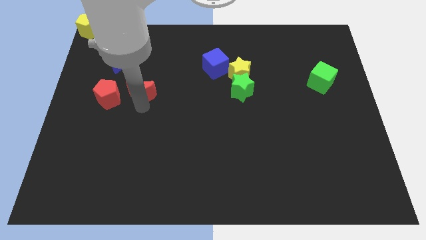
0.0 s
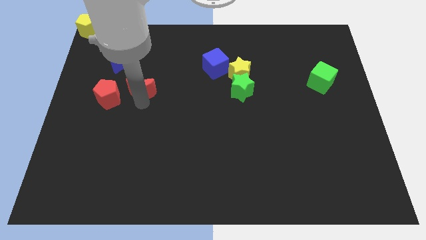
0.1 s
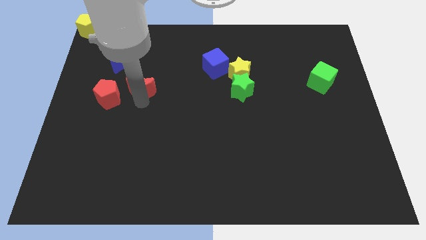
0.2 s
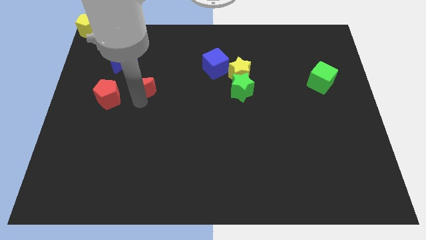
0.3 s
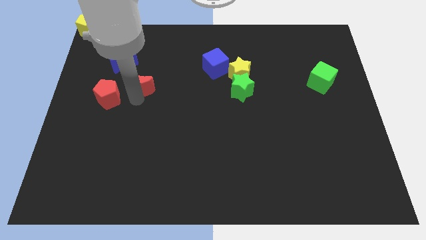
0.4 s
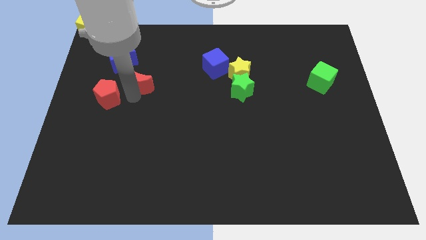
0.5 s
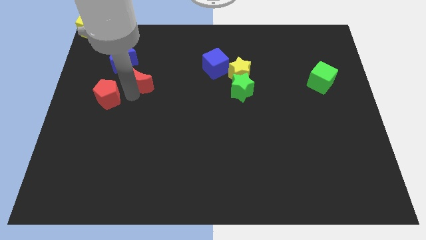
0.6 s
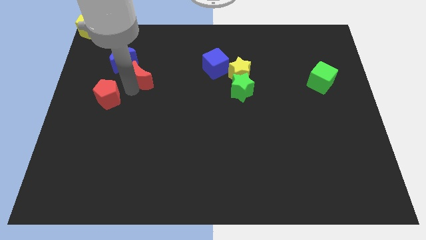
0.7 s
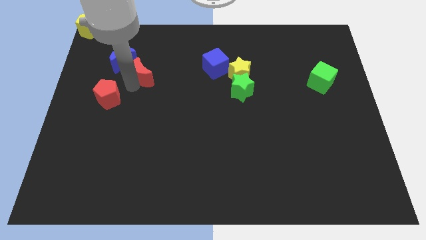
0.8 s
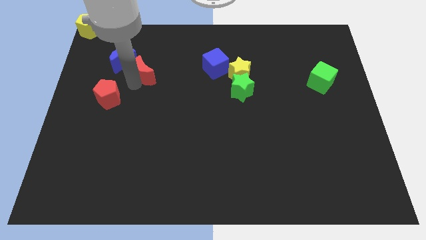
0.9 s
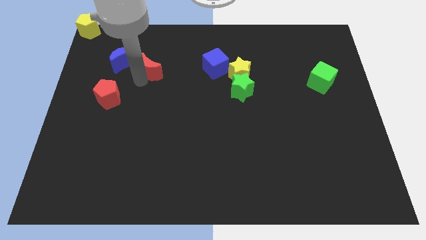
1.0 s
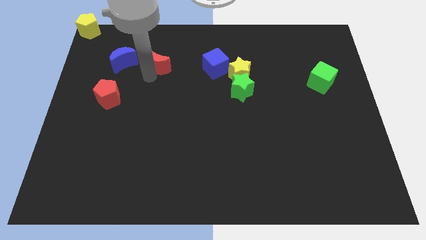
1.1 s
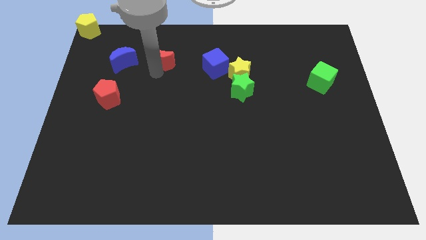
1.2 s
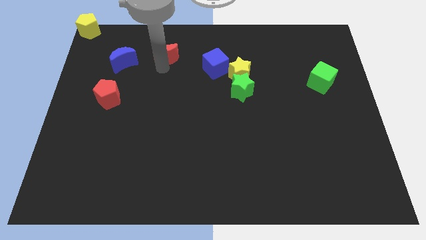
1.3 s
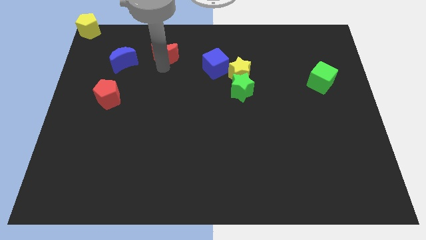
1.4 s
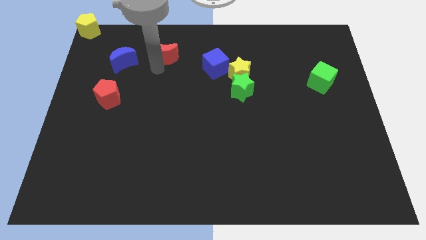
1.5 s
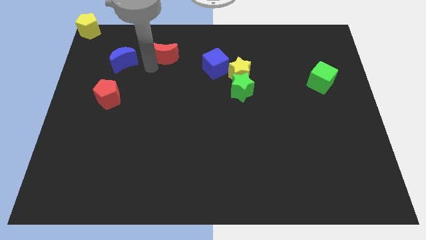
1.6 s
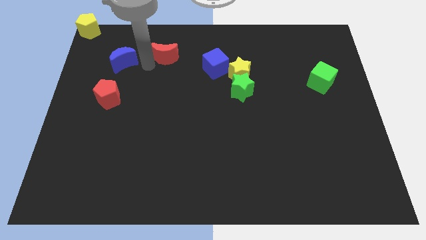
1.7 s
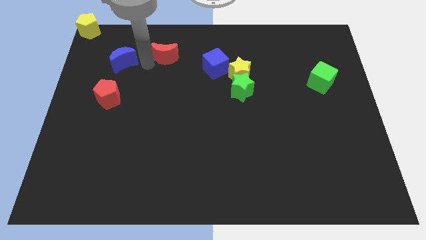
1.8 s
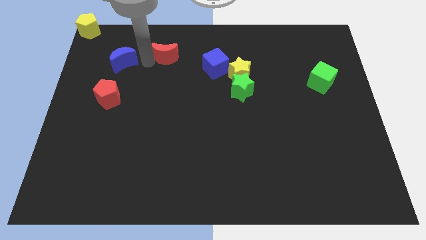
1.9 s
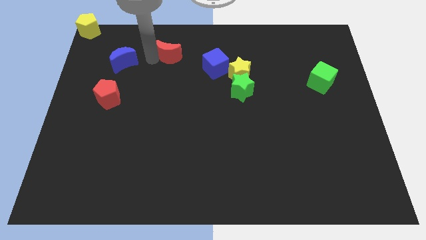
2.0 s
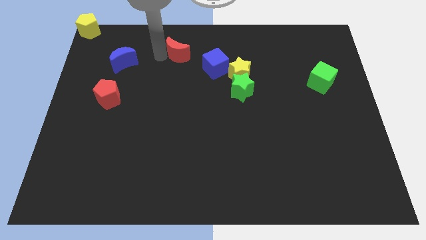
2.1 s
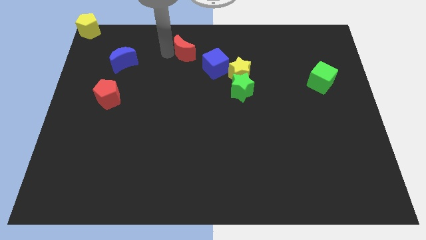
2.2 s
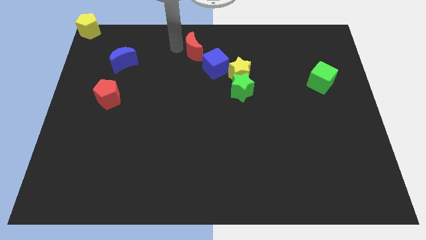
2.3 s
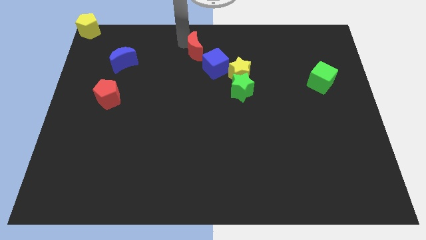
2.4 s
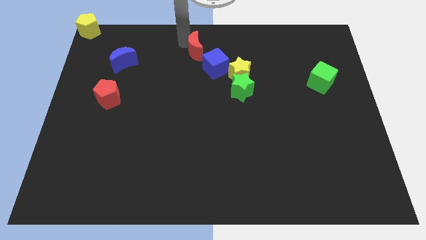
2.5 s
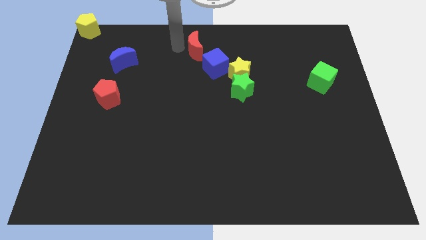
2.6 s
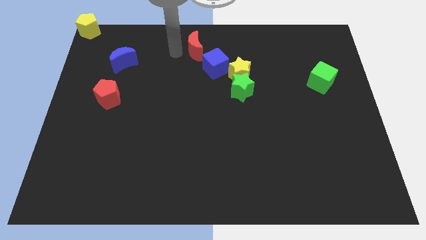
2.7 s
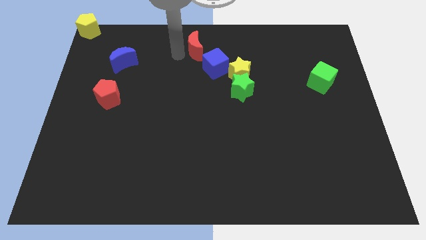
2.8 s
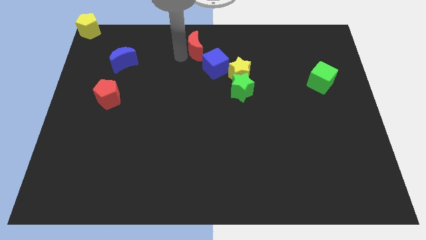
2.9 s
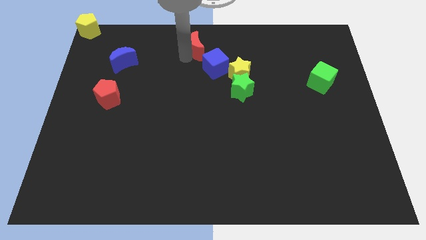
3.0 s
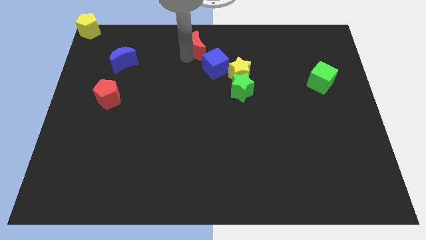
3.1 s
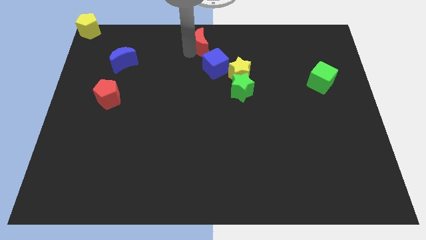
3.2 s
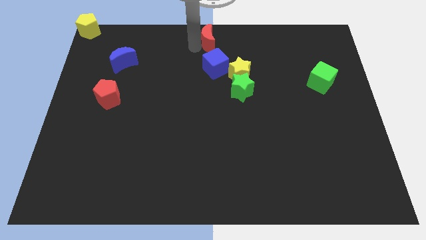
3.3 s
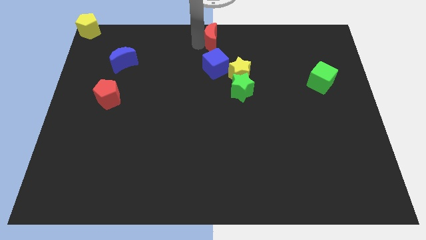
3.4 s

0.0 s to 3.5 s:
push red crescent above blue cube

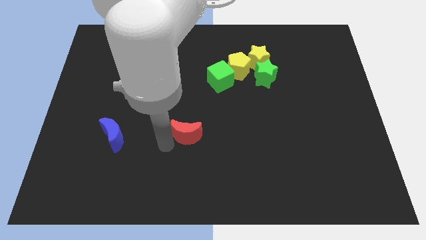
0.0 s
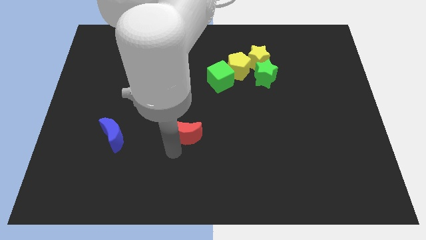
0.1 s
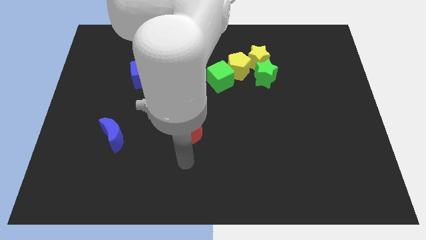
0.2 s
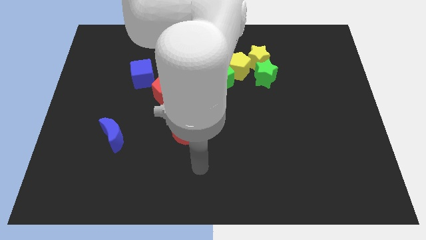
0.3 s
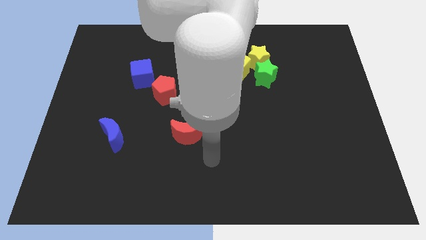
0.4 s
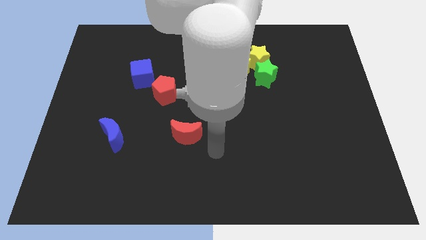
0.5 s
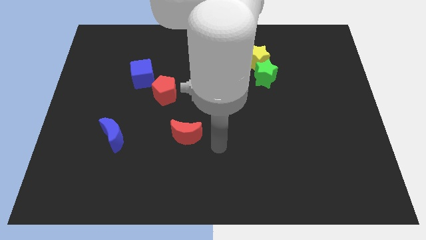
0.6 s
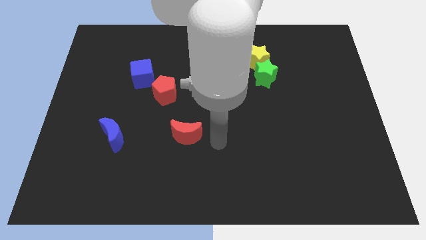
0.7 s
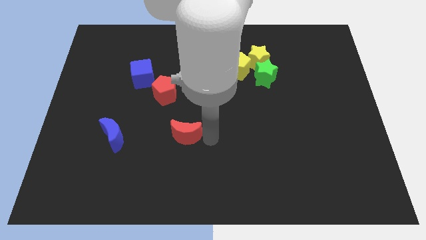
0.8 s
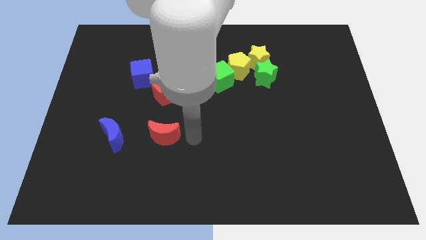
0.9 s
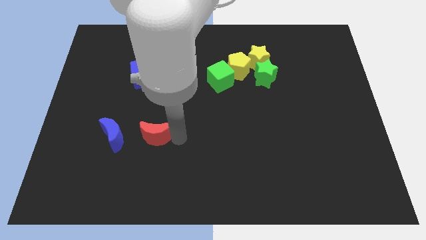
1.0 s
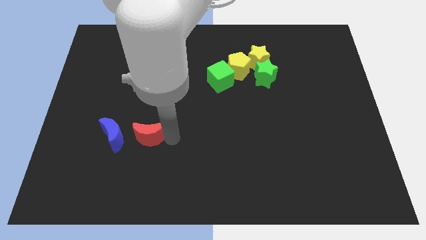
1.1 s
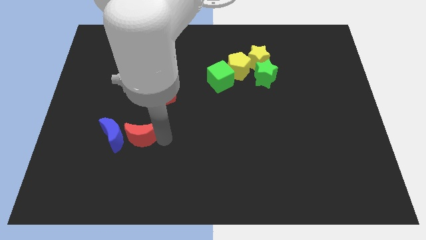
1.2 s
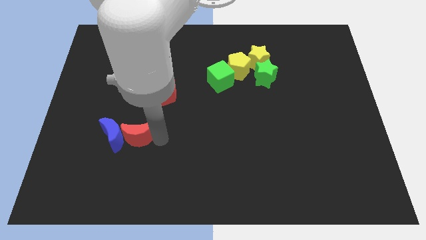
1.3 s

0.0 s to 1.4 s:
move the red crescent into the right side of the blue crescent

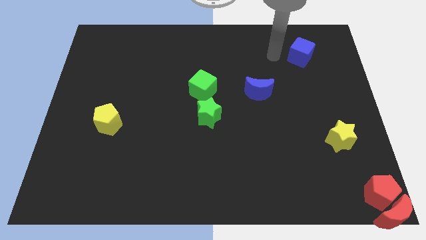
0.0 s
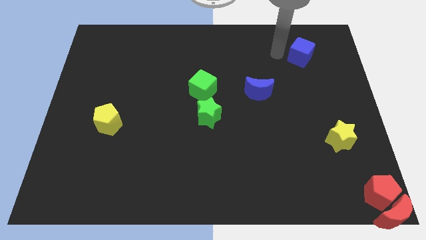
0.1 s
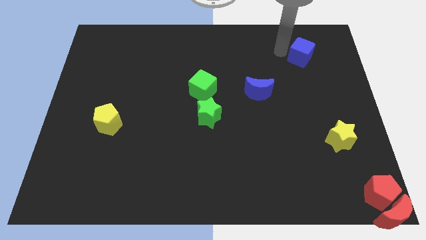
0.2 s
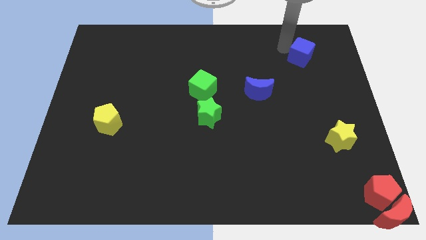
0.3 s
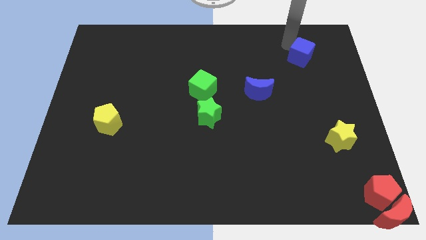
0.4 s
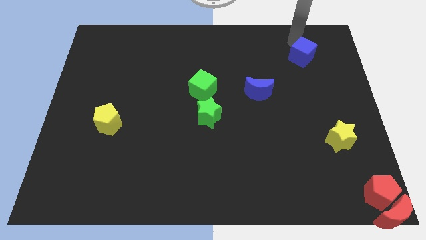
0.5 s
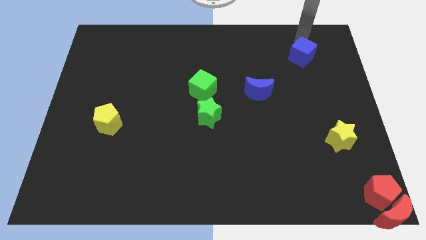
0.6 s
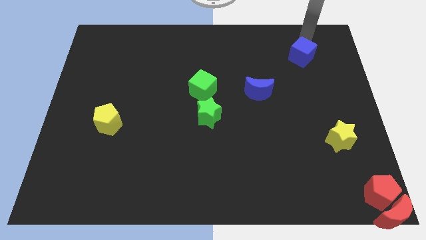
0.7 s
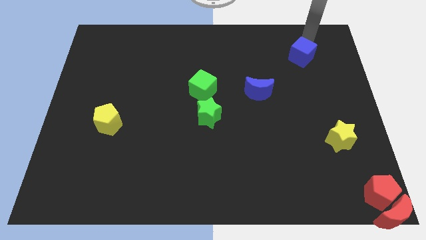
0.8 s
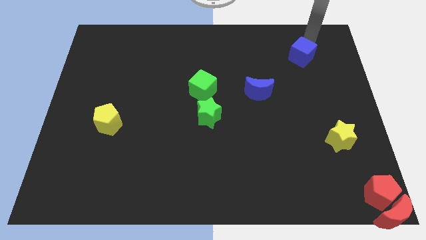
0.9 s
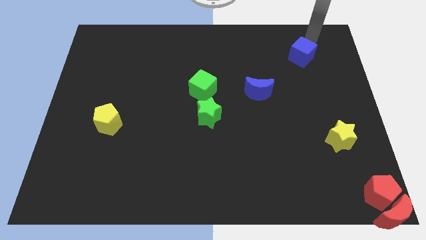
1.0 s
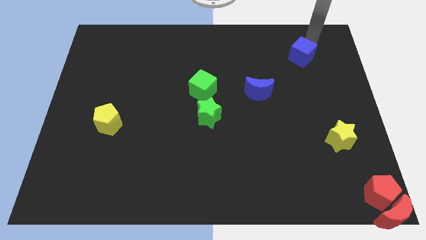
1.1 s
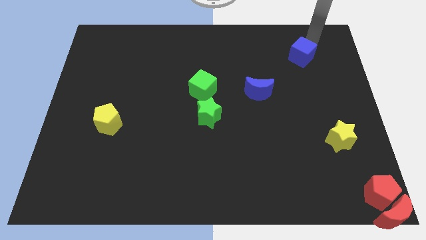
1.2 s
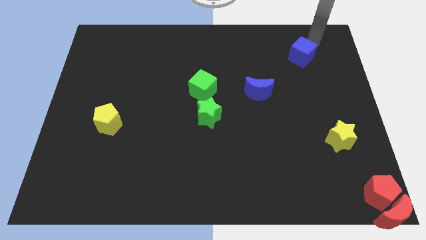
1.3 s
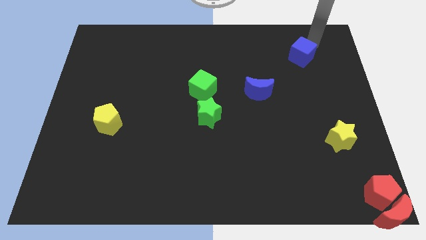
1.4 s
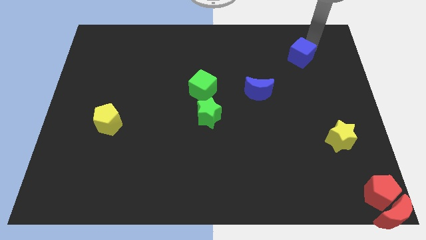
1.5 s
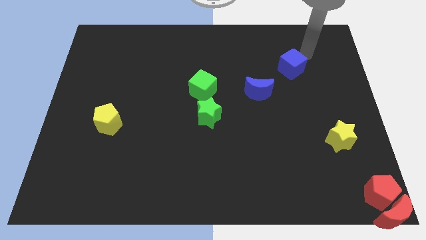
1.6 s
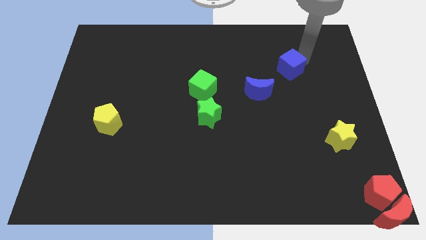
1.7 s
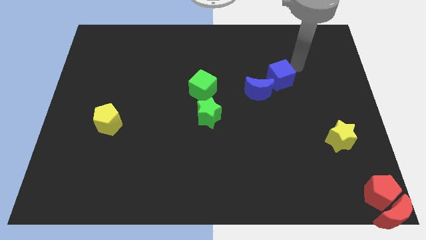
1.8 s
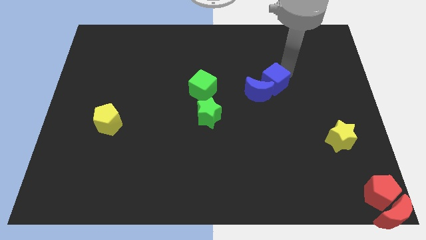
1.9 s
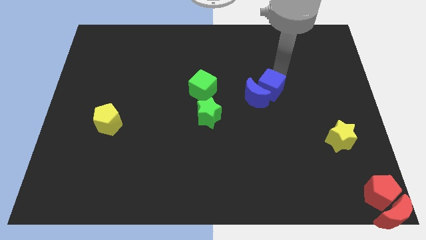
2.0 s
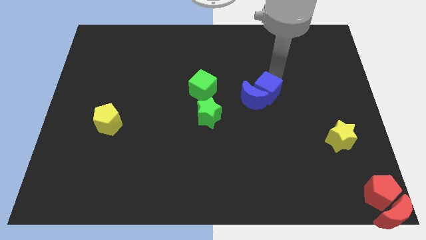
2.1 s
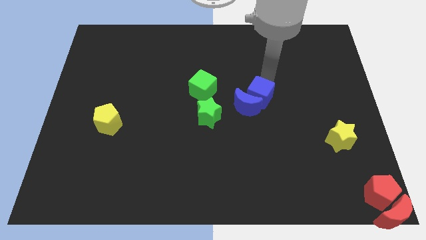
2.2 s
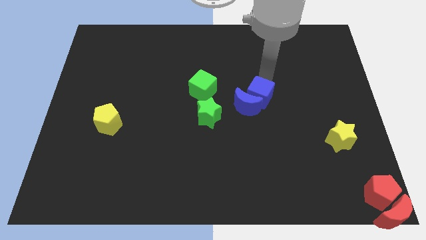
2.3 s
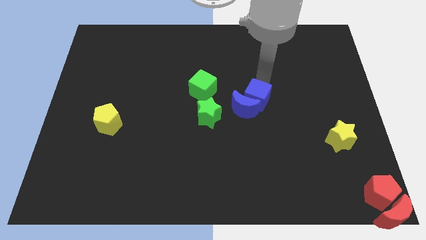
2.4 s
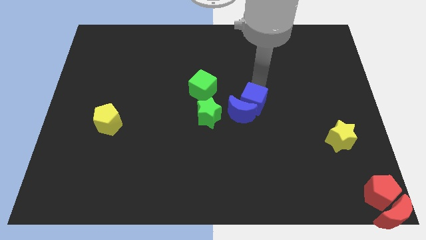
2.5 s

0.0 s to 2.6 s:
push the blue cube into the blue moon

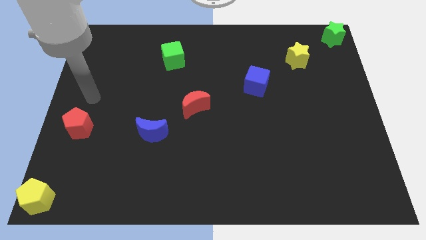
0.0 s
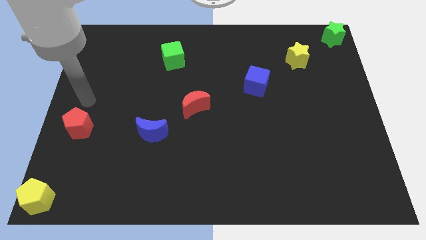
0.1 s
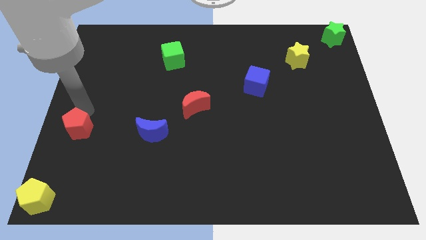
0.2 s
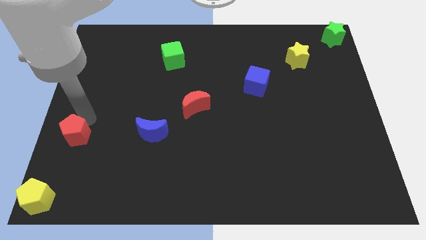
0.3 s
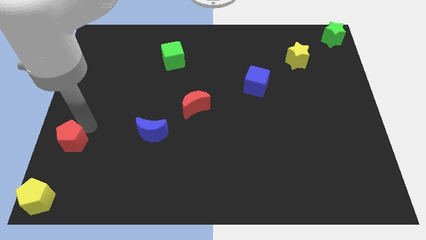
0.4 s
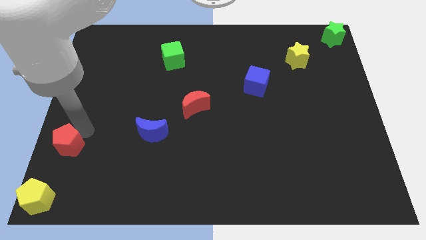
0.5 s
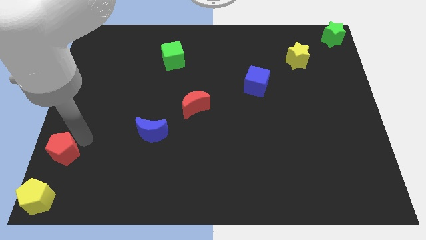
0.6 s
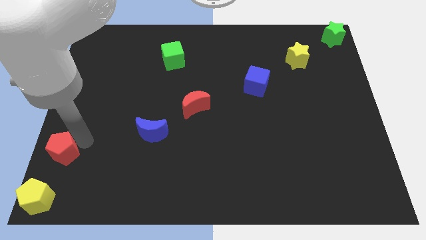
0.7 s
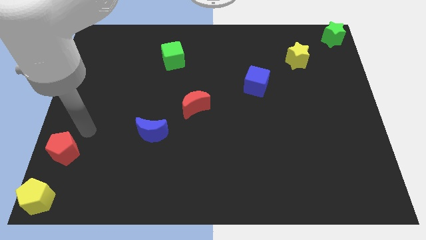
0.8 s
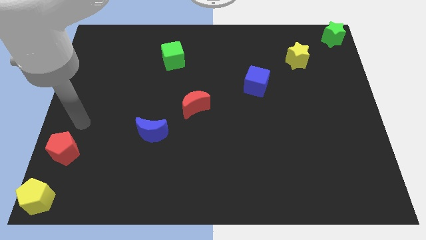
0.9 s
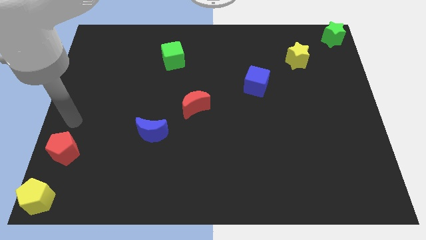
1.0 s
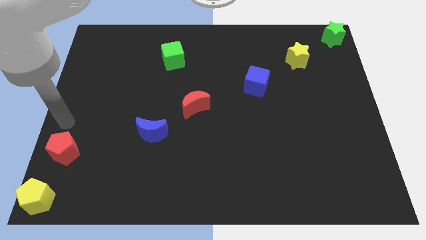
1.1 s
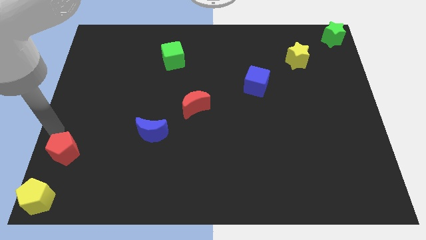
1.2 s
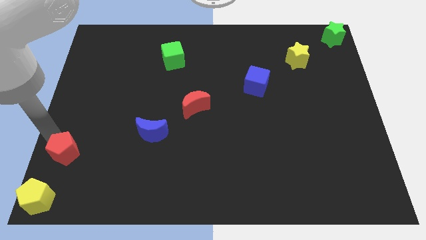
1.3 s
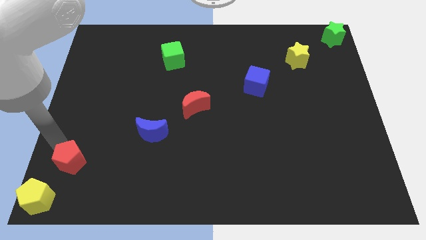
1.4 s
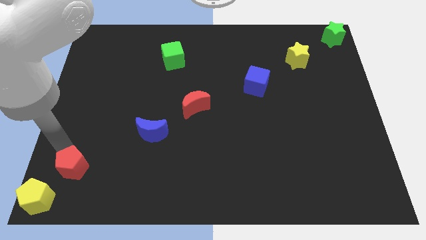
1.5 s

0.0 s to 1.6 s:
push the red pentagon towards the yellow pentagon
